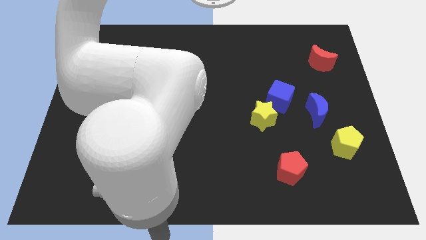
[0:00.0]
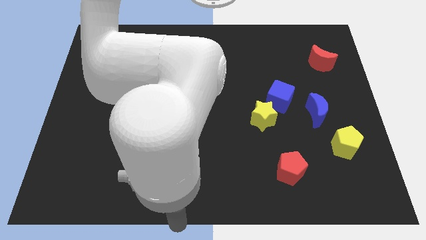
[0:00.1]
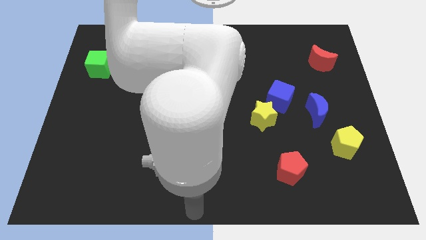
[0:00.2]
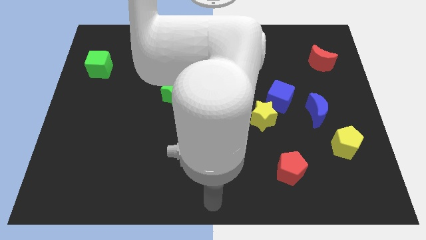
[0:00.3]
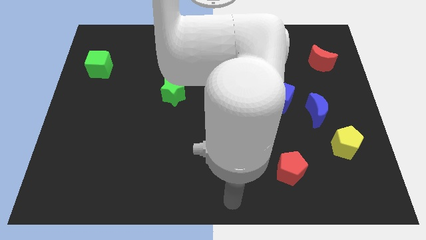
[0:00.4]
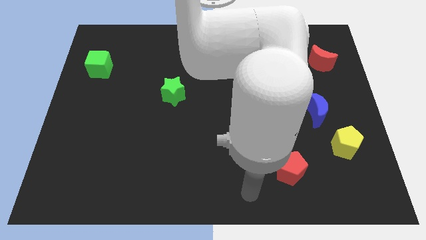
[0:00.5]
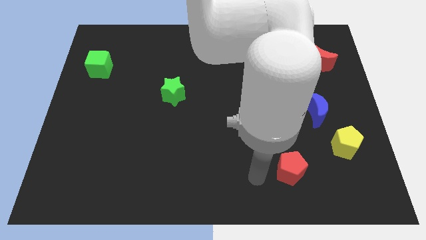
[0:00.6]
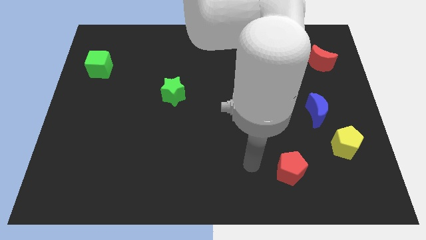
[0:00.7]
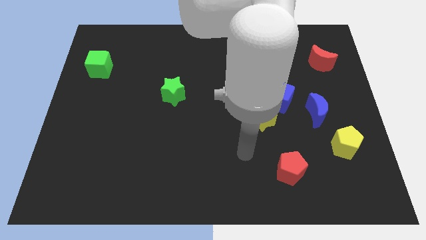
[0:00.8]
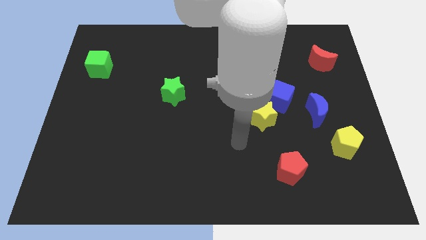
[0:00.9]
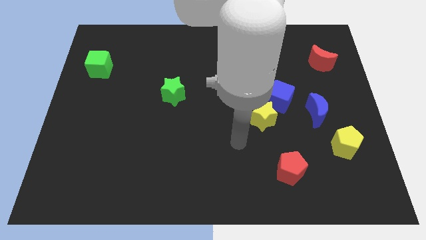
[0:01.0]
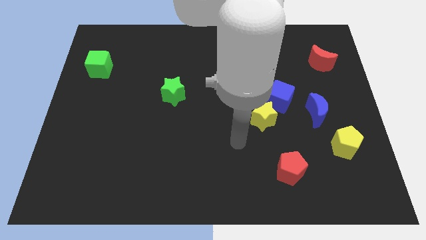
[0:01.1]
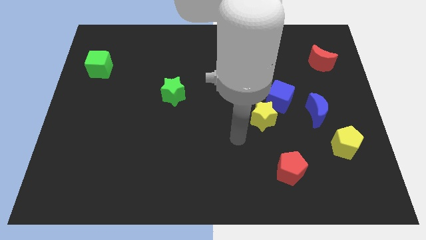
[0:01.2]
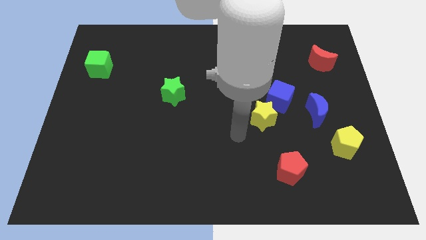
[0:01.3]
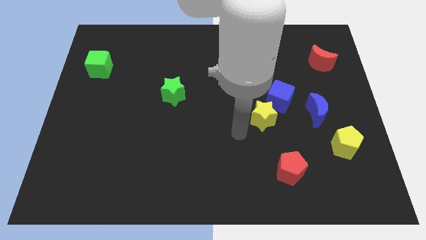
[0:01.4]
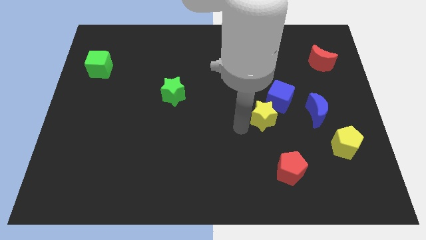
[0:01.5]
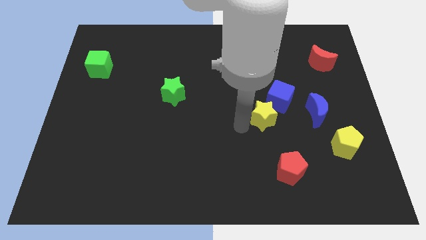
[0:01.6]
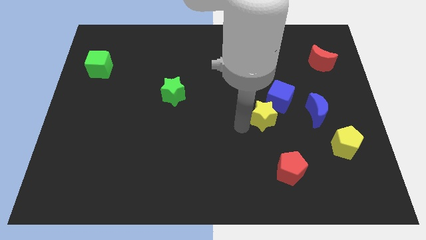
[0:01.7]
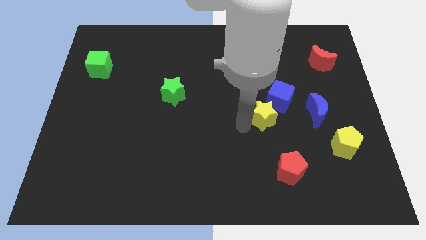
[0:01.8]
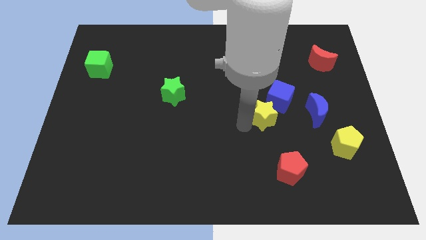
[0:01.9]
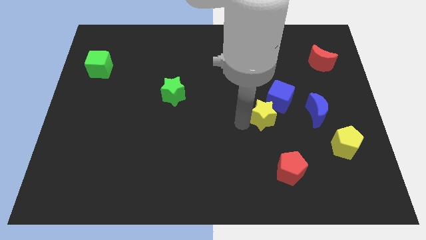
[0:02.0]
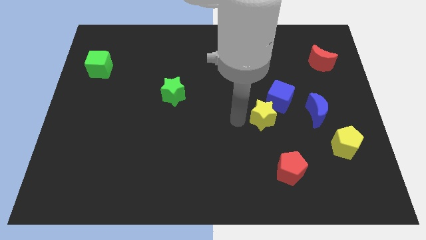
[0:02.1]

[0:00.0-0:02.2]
move your arm towards the yellow star

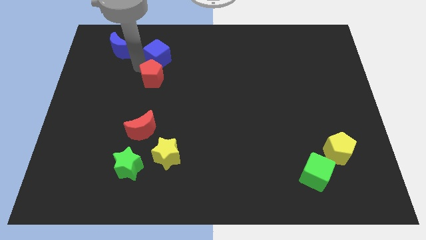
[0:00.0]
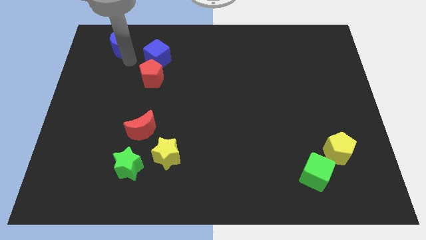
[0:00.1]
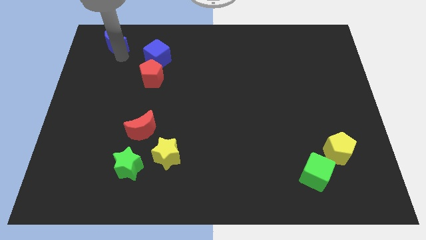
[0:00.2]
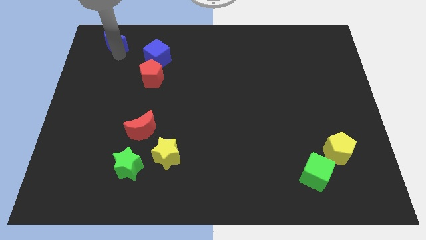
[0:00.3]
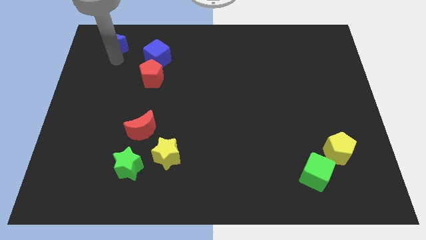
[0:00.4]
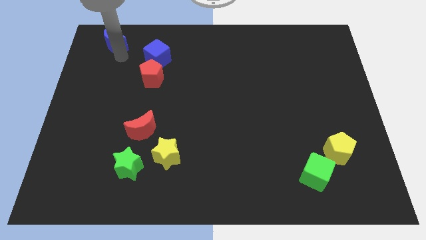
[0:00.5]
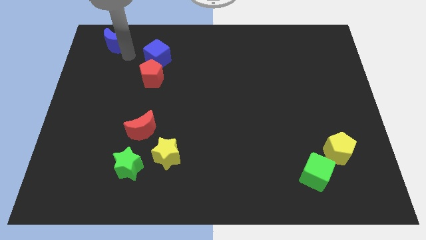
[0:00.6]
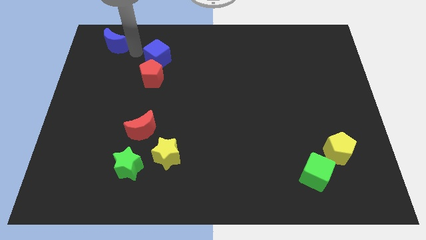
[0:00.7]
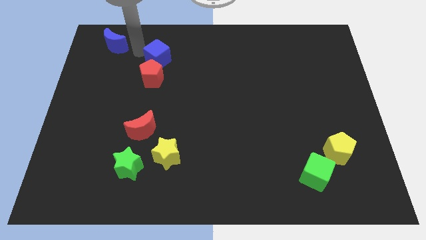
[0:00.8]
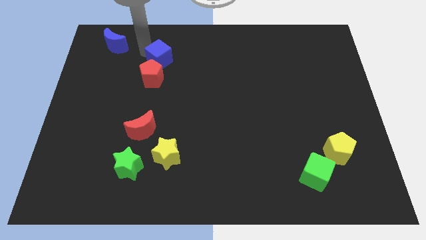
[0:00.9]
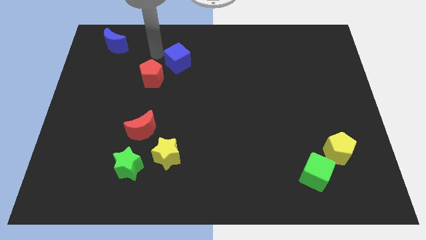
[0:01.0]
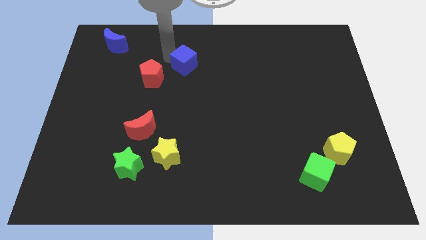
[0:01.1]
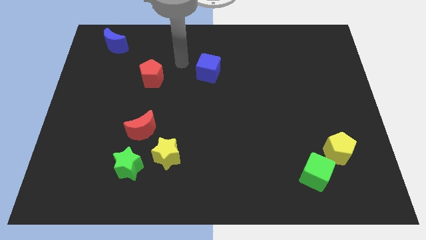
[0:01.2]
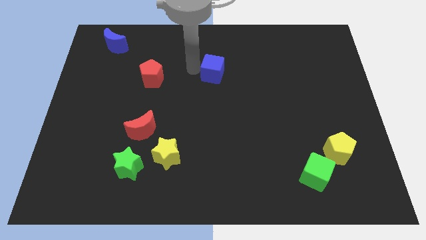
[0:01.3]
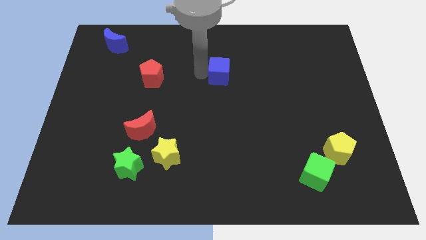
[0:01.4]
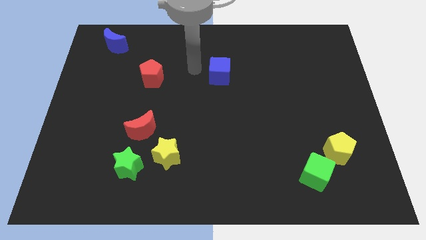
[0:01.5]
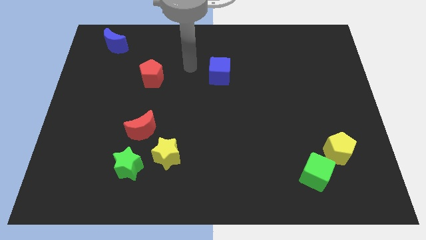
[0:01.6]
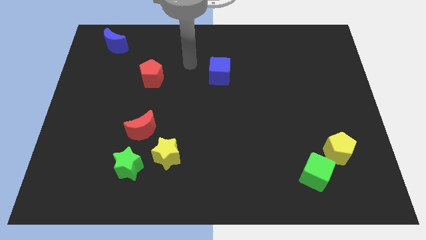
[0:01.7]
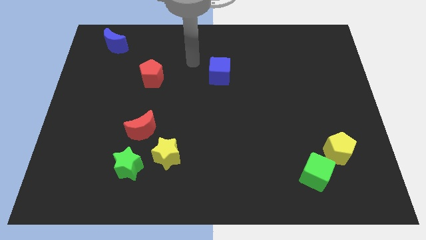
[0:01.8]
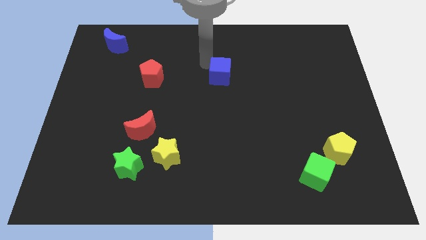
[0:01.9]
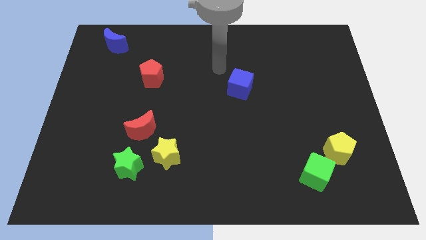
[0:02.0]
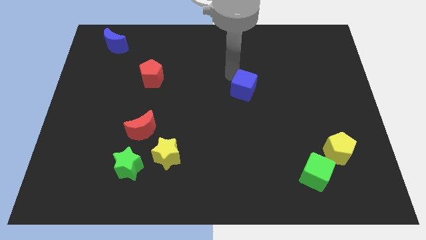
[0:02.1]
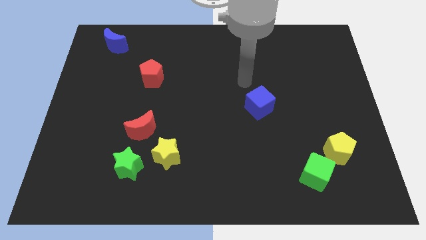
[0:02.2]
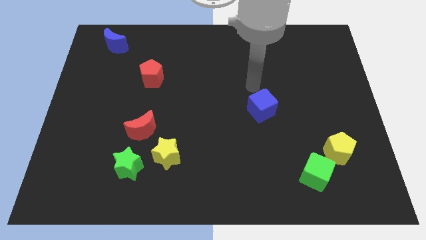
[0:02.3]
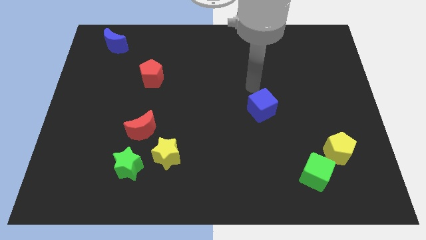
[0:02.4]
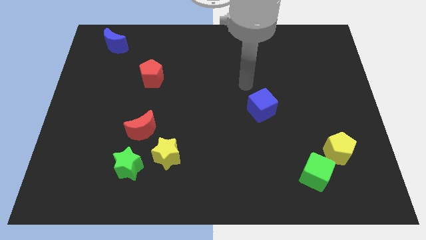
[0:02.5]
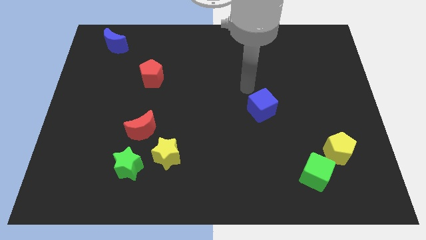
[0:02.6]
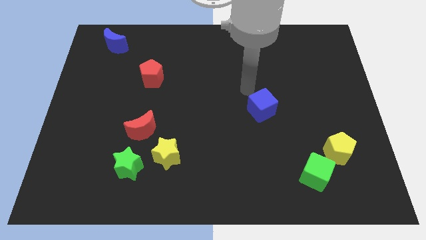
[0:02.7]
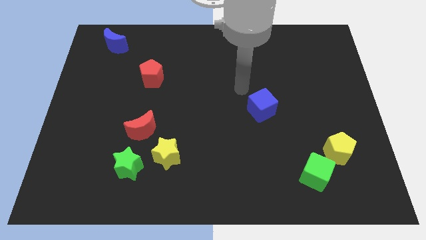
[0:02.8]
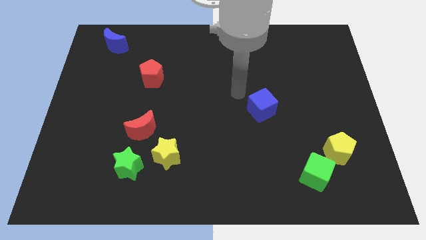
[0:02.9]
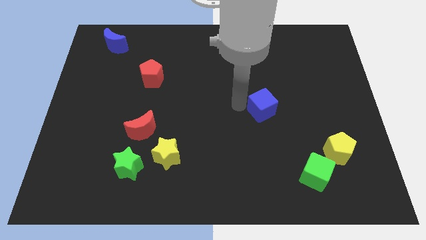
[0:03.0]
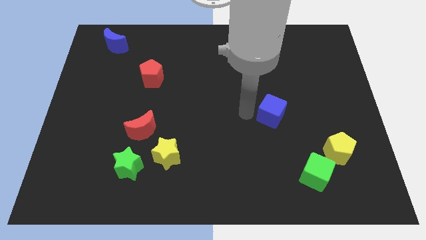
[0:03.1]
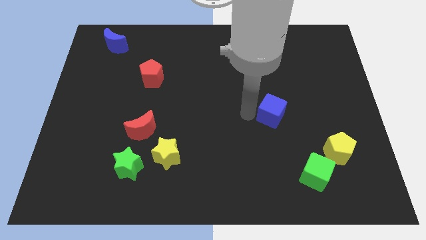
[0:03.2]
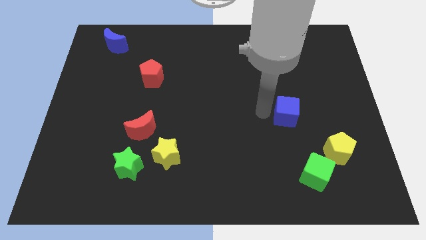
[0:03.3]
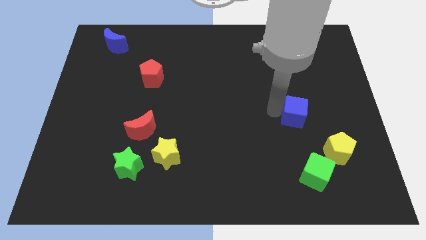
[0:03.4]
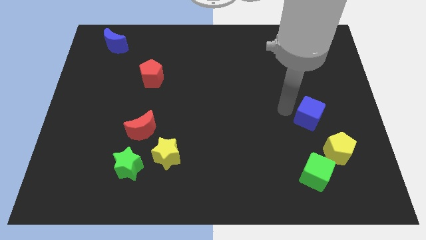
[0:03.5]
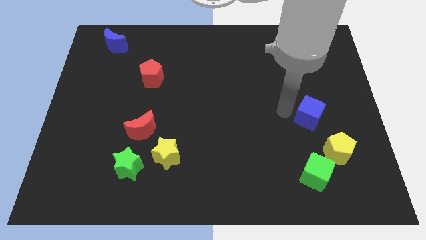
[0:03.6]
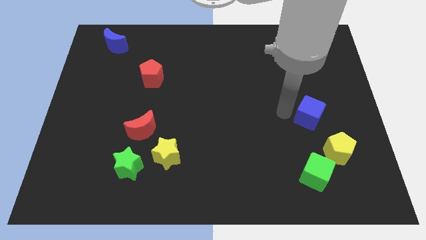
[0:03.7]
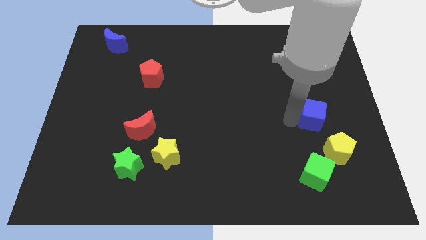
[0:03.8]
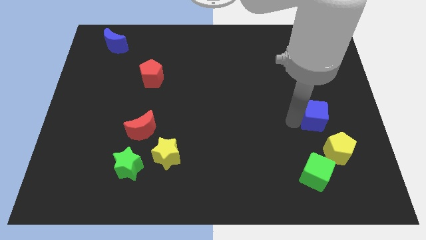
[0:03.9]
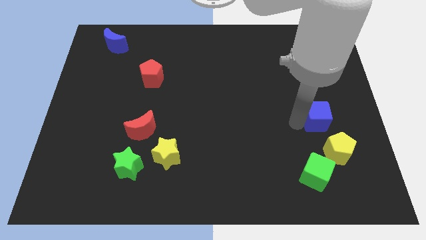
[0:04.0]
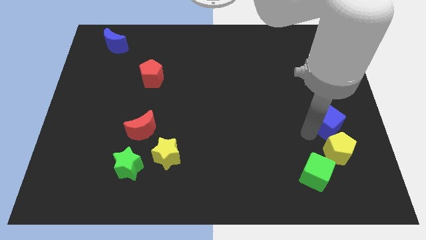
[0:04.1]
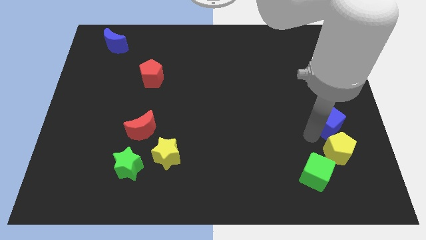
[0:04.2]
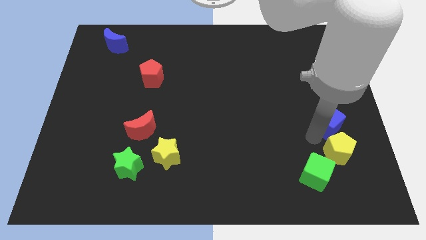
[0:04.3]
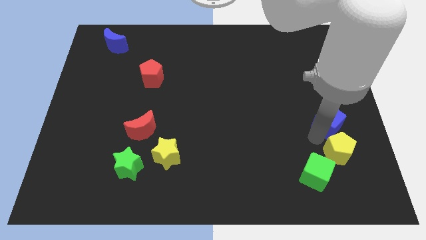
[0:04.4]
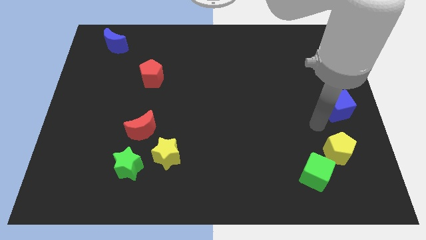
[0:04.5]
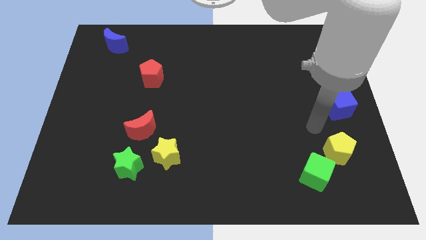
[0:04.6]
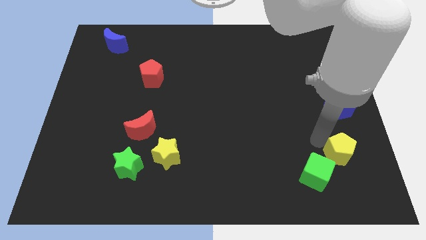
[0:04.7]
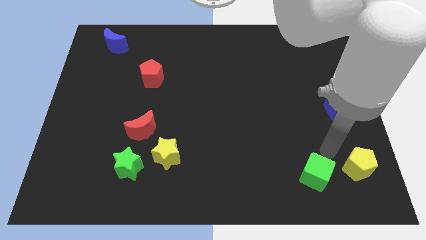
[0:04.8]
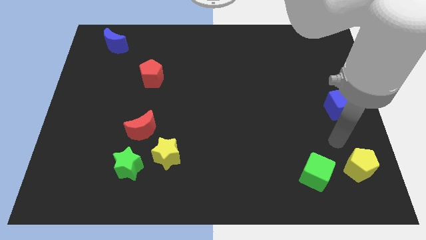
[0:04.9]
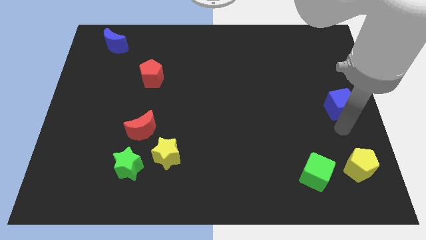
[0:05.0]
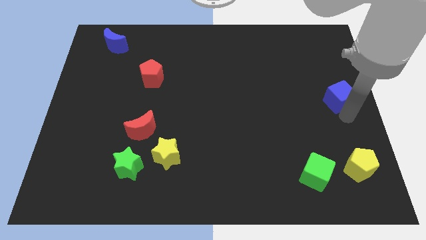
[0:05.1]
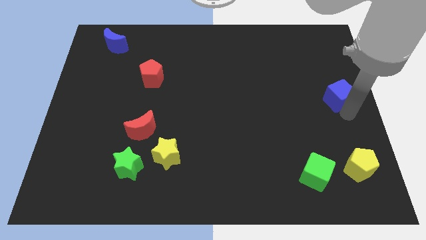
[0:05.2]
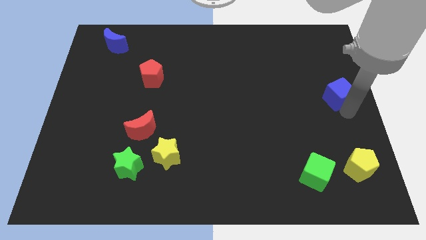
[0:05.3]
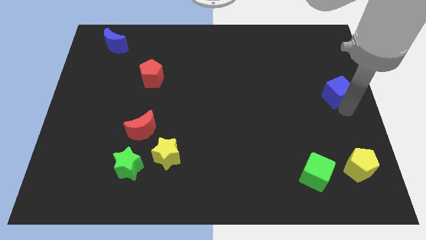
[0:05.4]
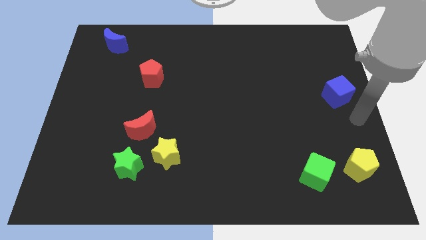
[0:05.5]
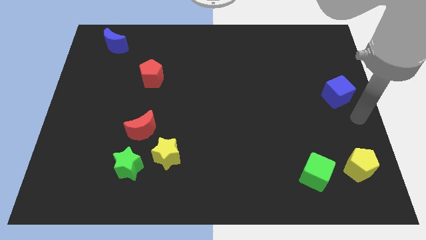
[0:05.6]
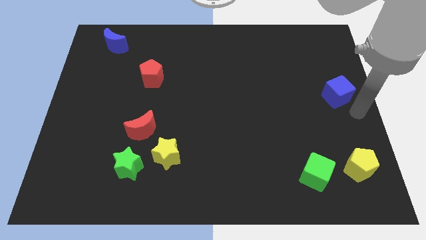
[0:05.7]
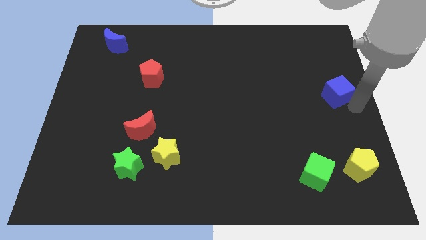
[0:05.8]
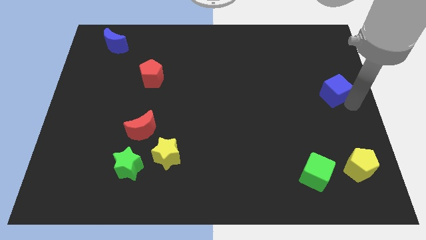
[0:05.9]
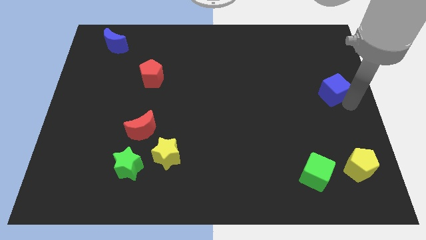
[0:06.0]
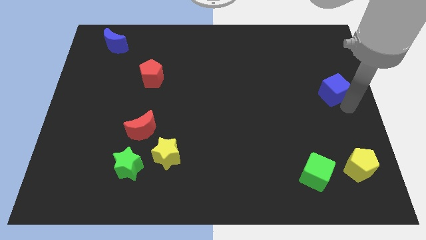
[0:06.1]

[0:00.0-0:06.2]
place the blue moon at the right center corner

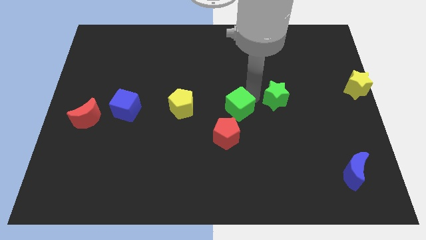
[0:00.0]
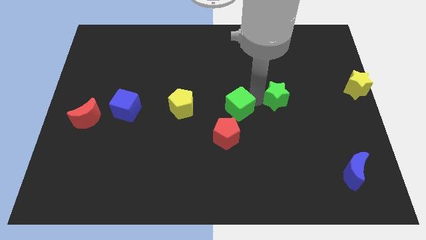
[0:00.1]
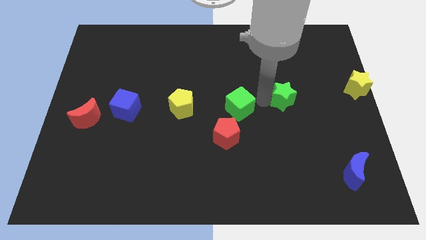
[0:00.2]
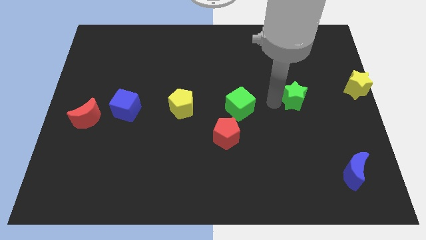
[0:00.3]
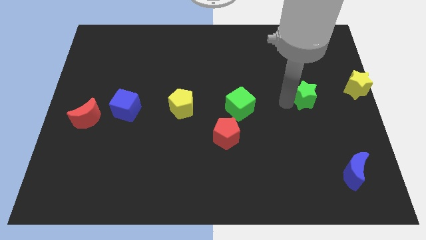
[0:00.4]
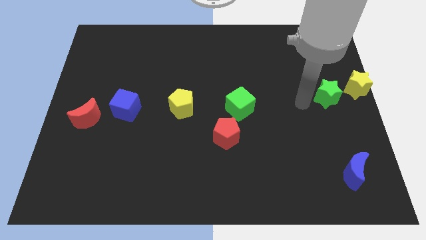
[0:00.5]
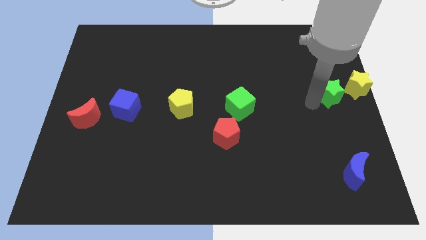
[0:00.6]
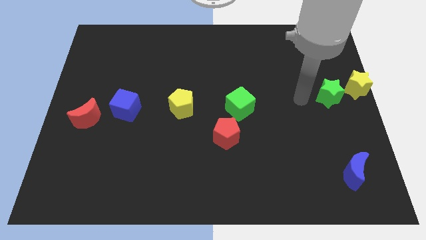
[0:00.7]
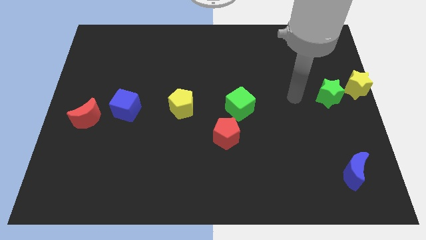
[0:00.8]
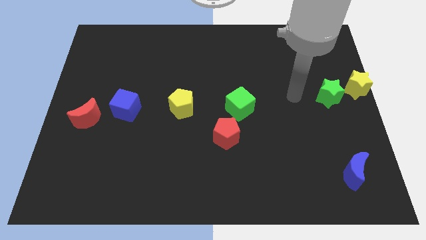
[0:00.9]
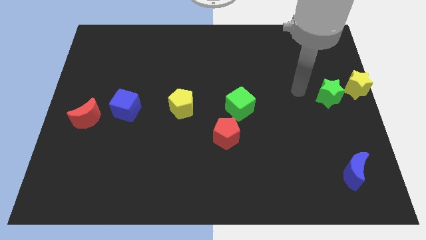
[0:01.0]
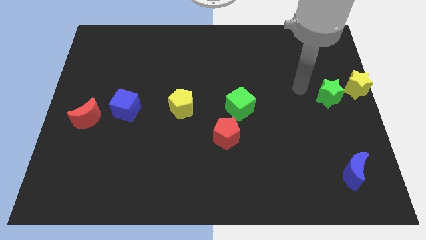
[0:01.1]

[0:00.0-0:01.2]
move the green star to the left of the yellow star
